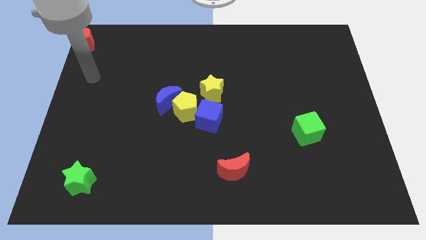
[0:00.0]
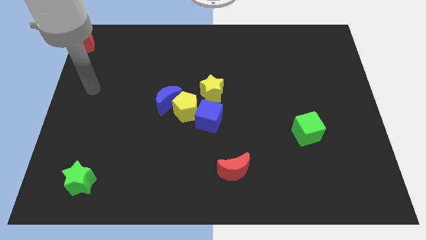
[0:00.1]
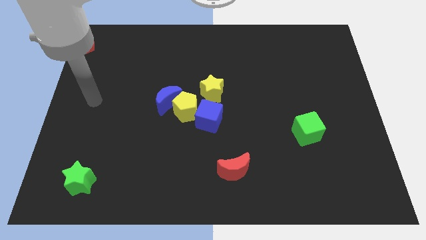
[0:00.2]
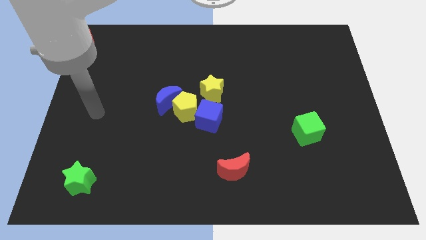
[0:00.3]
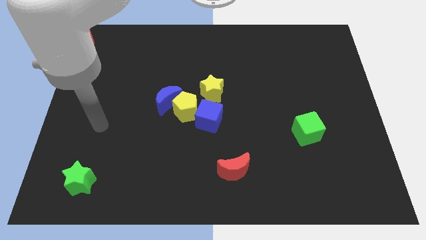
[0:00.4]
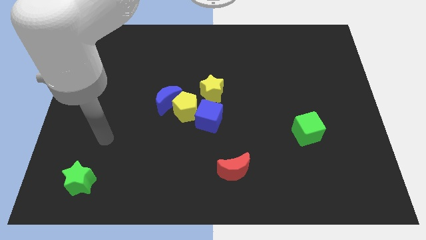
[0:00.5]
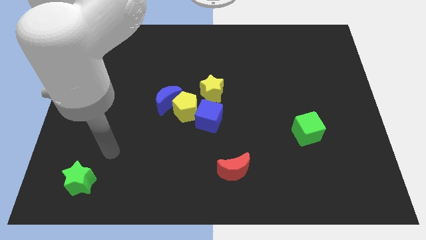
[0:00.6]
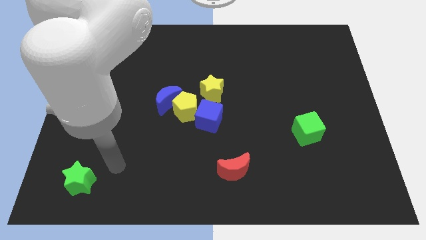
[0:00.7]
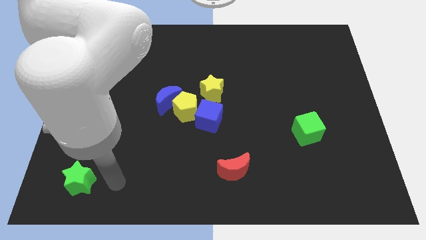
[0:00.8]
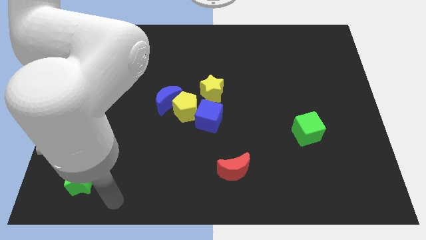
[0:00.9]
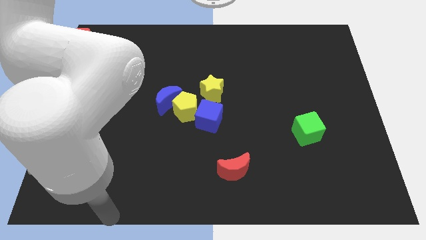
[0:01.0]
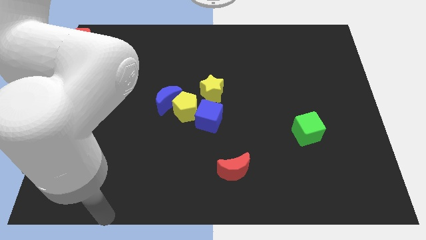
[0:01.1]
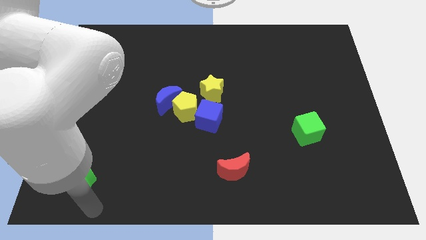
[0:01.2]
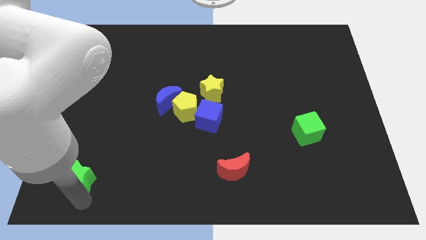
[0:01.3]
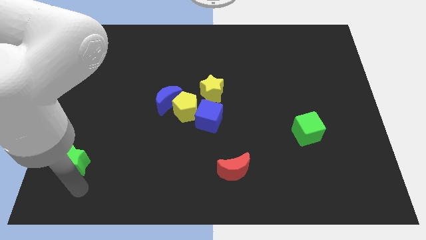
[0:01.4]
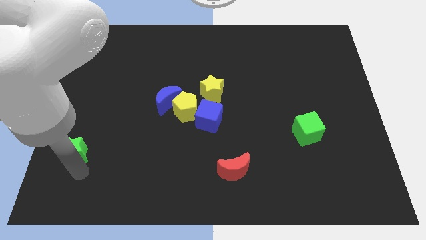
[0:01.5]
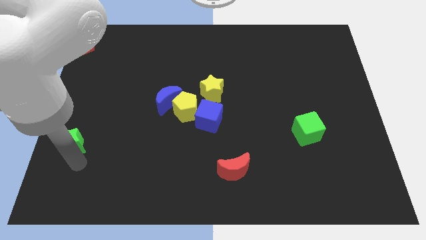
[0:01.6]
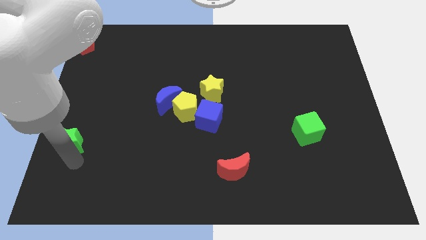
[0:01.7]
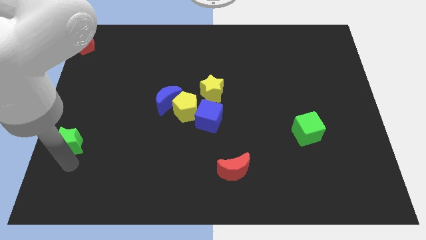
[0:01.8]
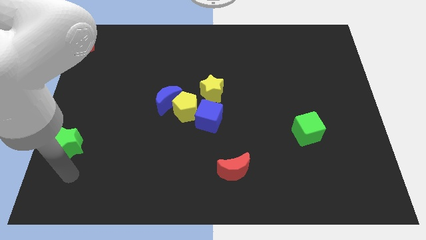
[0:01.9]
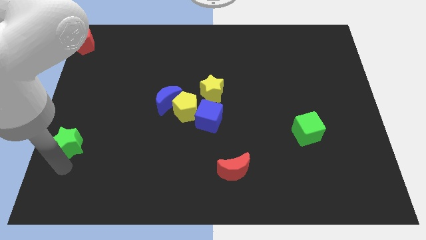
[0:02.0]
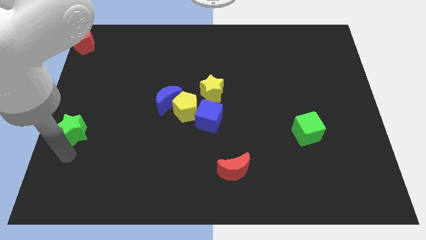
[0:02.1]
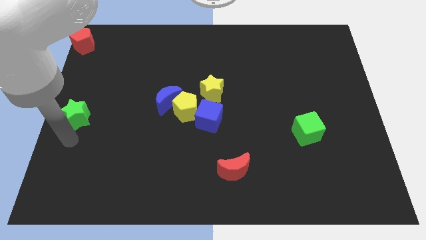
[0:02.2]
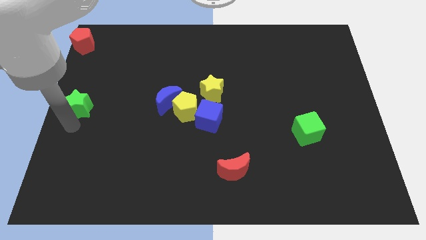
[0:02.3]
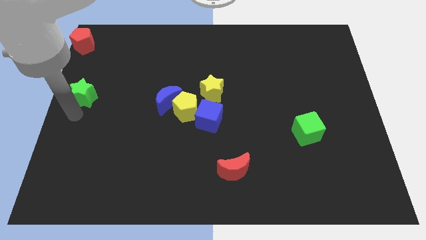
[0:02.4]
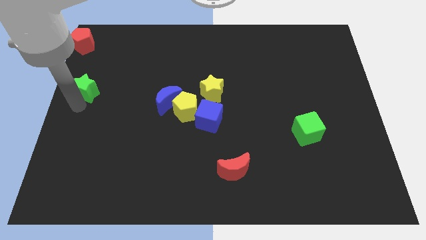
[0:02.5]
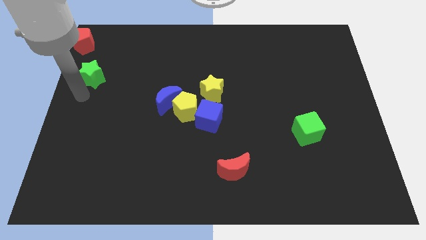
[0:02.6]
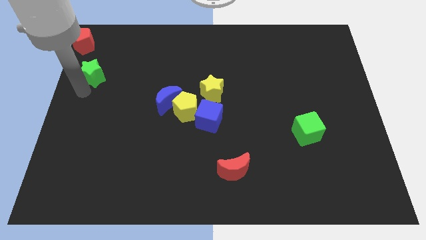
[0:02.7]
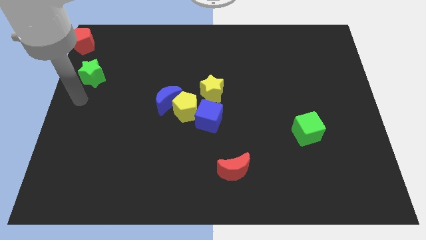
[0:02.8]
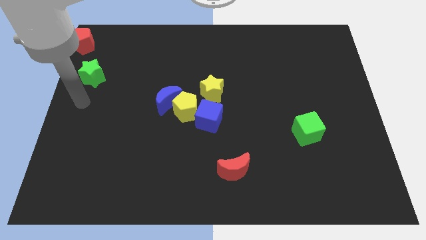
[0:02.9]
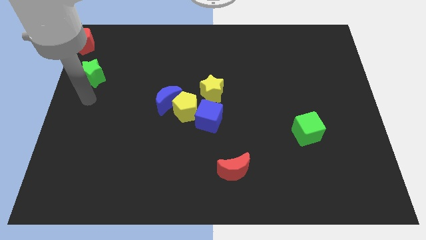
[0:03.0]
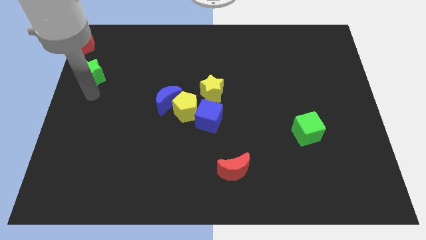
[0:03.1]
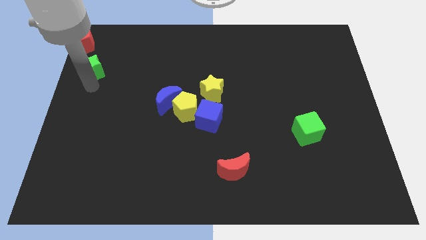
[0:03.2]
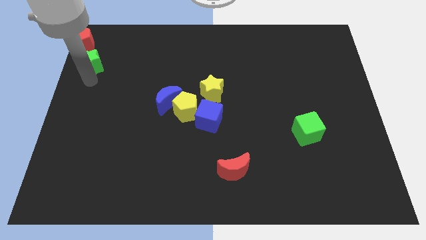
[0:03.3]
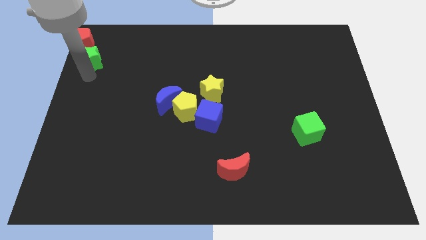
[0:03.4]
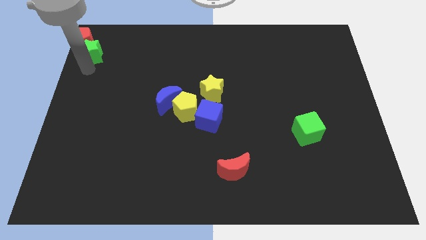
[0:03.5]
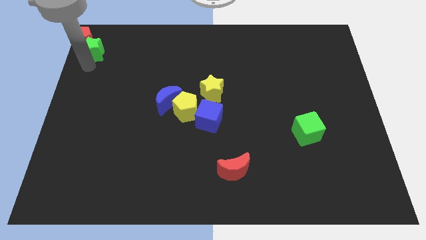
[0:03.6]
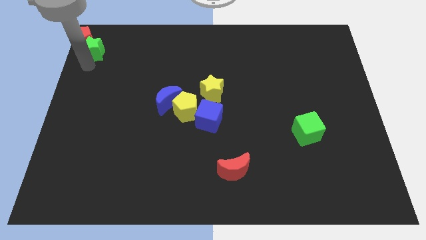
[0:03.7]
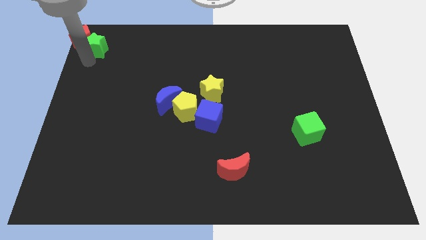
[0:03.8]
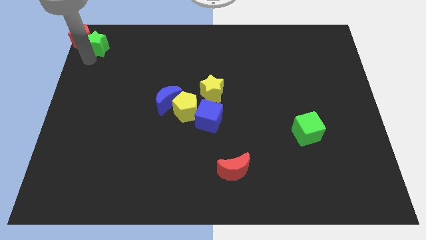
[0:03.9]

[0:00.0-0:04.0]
move the green star to right of the red pentagon

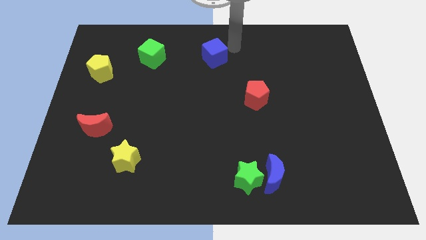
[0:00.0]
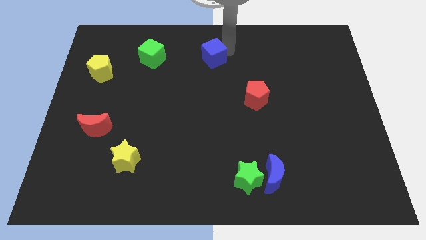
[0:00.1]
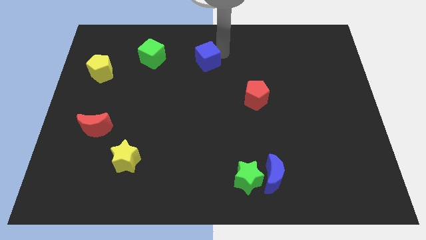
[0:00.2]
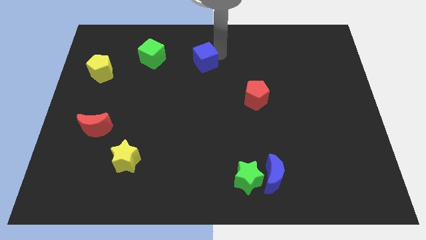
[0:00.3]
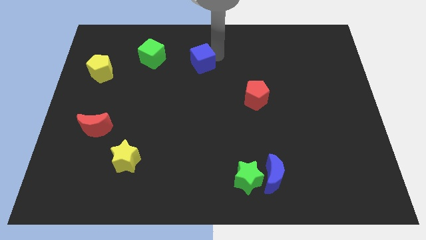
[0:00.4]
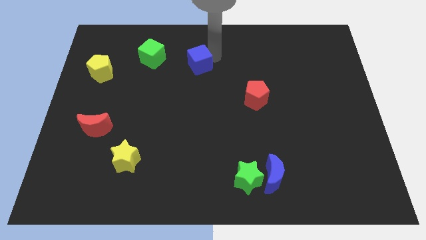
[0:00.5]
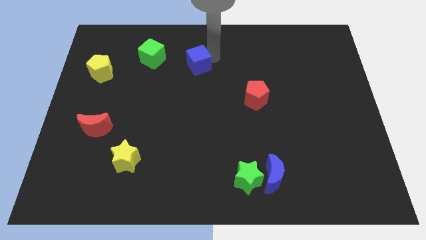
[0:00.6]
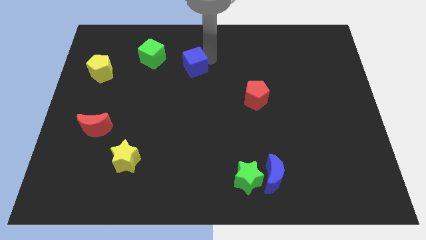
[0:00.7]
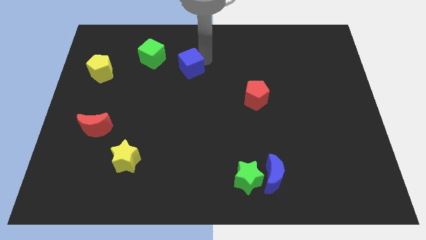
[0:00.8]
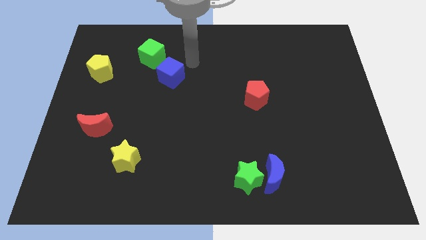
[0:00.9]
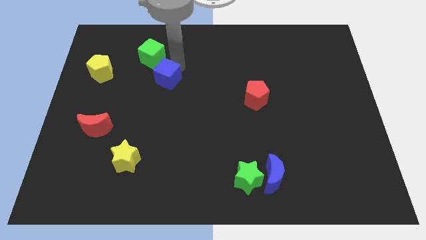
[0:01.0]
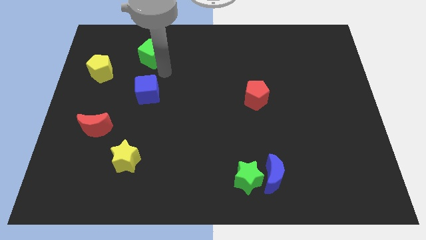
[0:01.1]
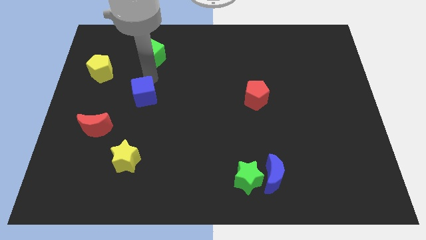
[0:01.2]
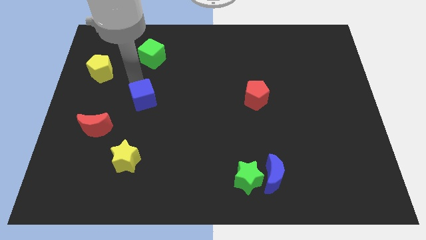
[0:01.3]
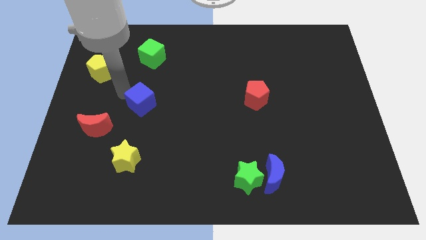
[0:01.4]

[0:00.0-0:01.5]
move the blue cube between green cube and yellow star

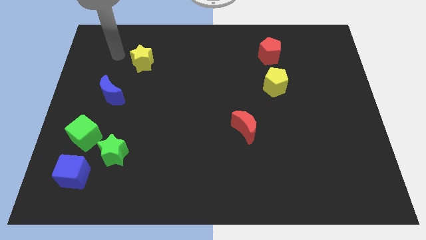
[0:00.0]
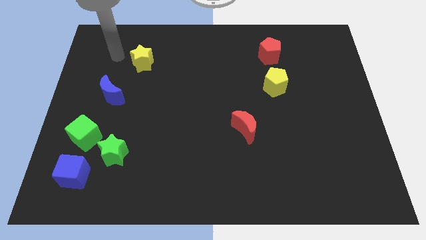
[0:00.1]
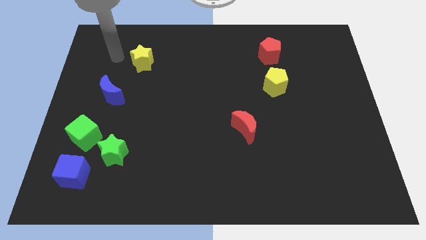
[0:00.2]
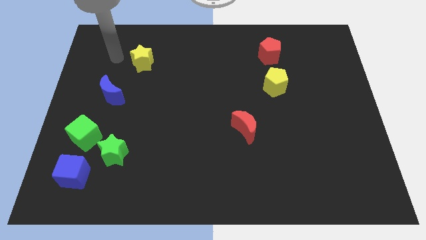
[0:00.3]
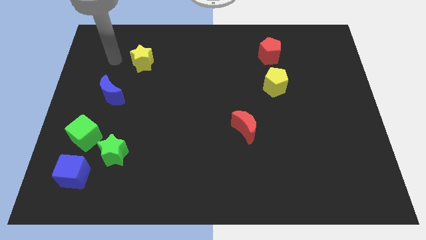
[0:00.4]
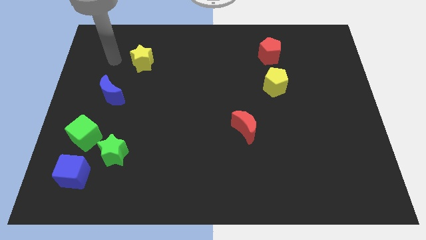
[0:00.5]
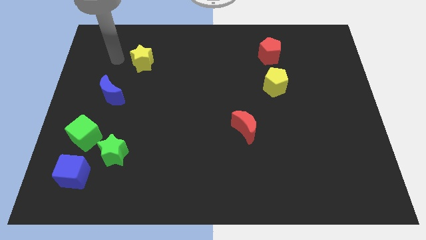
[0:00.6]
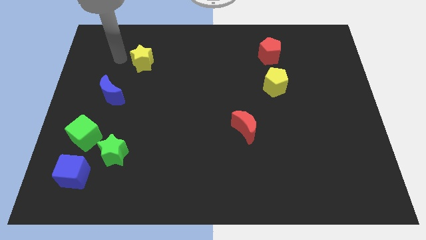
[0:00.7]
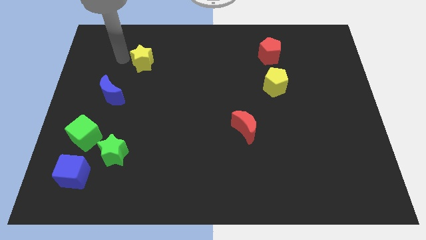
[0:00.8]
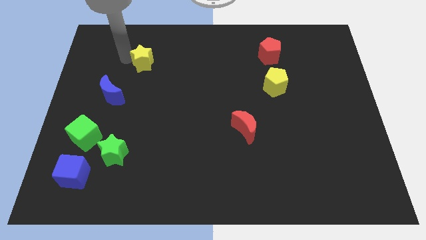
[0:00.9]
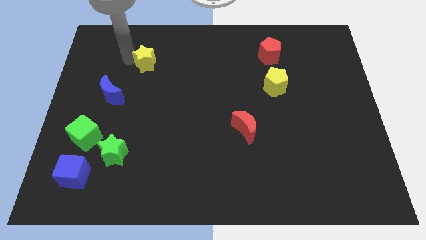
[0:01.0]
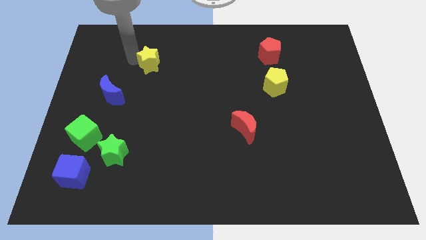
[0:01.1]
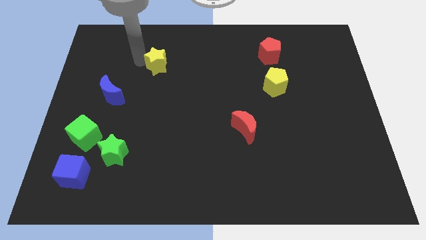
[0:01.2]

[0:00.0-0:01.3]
push the yellow star slightly to the right

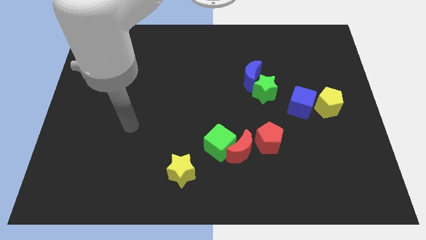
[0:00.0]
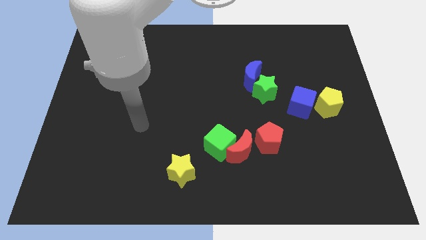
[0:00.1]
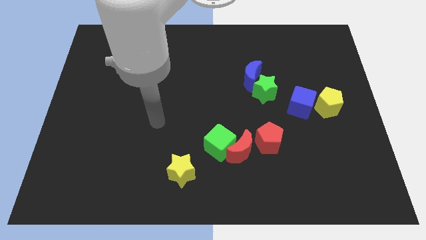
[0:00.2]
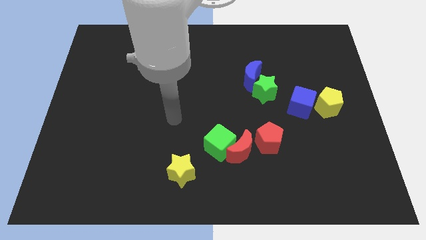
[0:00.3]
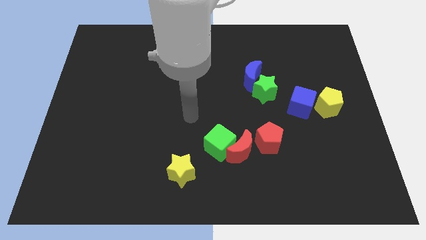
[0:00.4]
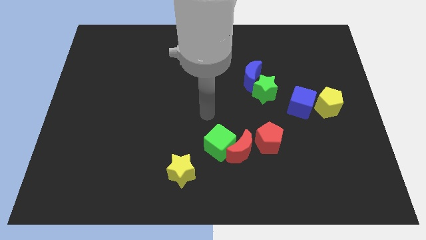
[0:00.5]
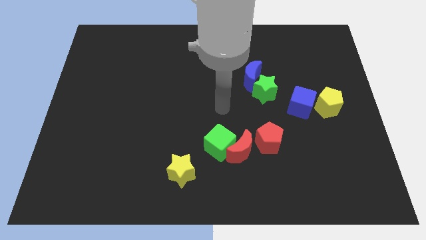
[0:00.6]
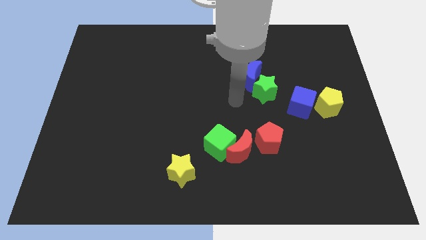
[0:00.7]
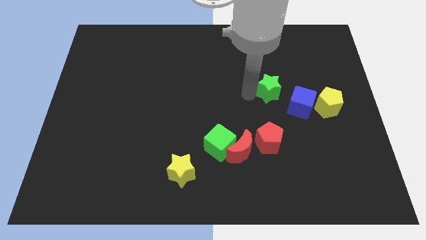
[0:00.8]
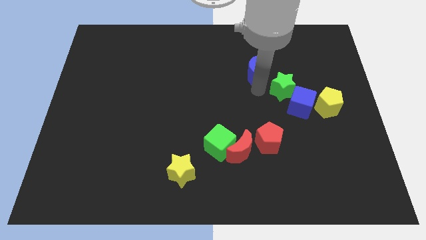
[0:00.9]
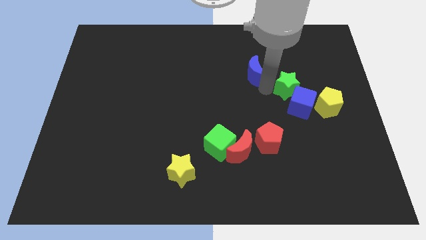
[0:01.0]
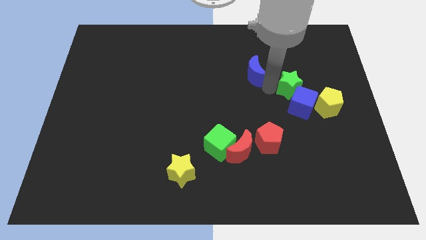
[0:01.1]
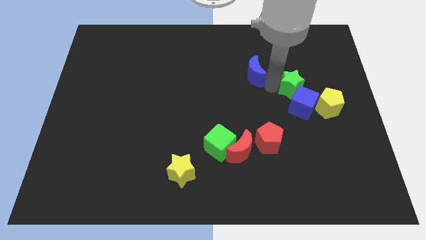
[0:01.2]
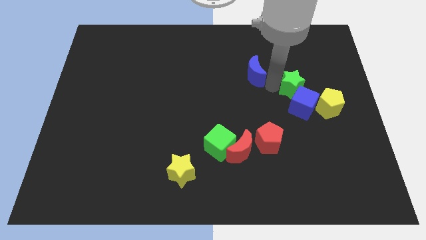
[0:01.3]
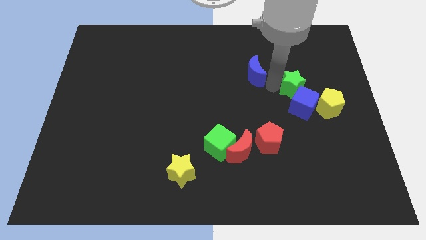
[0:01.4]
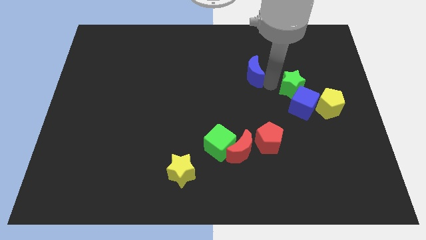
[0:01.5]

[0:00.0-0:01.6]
slide the green star slightly to the right

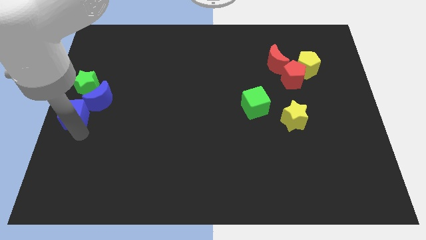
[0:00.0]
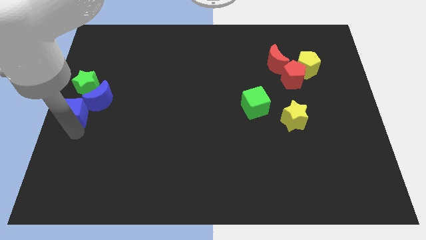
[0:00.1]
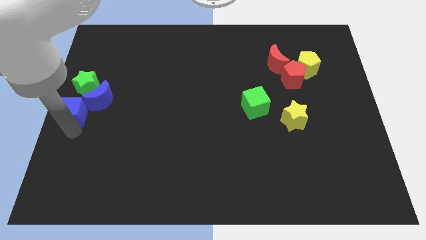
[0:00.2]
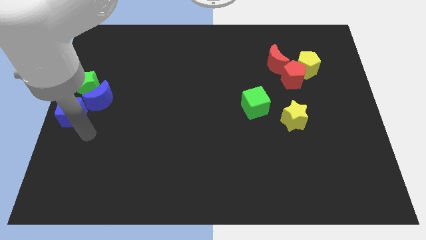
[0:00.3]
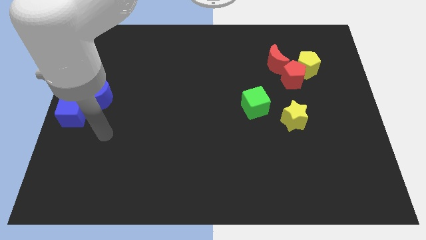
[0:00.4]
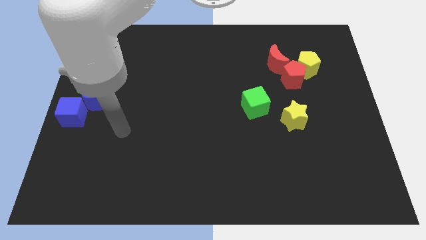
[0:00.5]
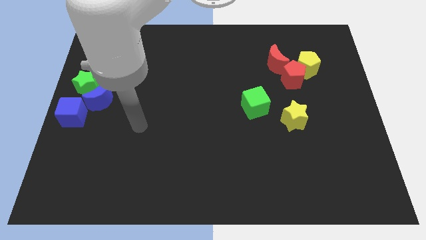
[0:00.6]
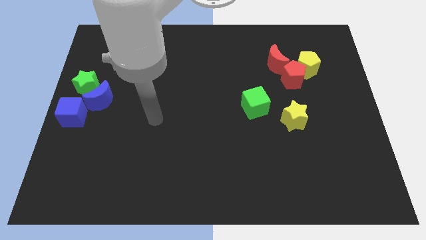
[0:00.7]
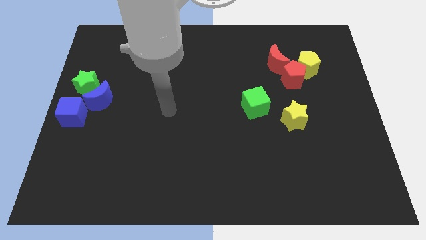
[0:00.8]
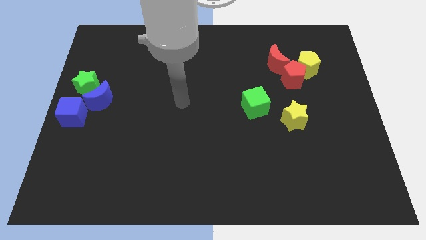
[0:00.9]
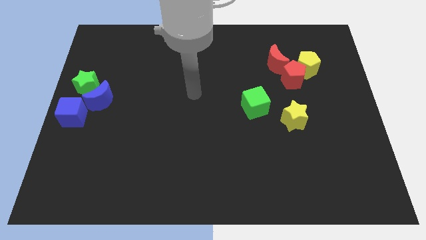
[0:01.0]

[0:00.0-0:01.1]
place the blue cube left of blue crescent
